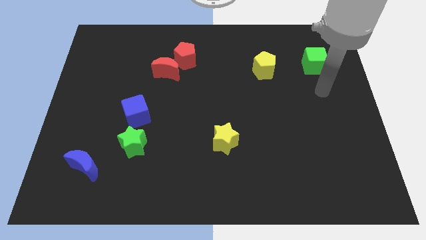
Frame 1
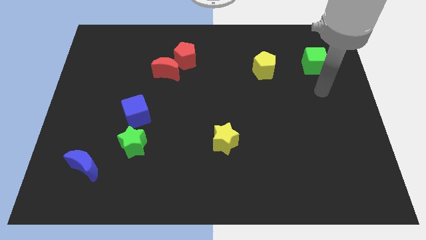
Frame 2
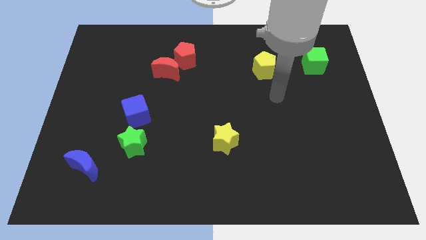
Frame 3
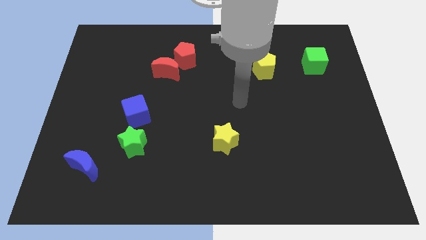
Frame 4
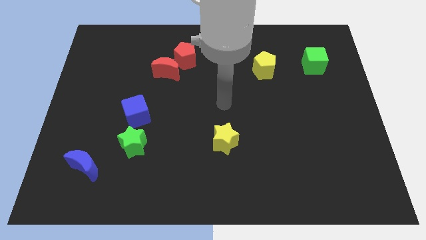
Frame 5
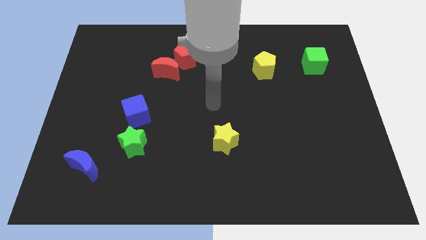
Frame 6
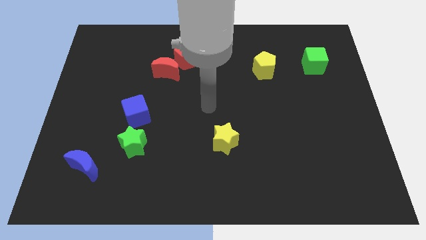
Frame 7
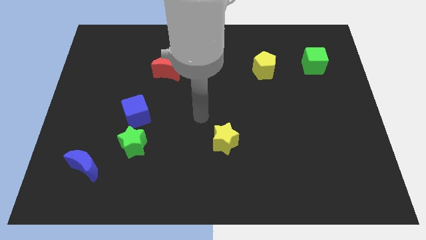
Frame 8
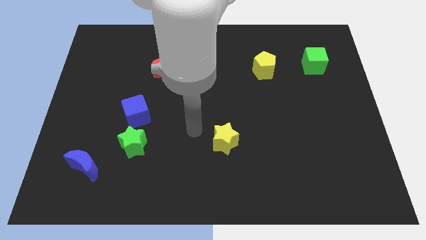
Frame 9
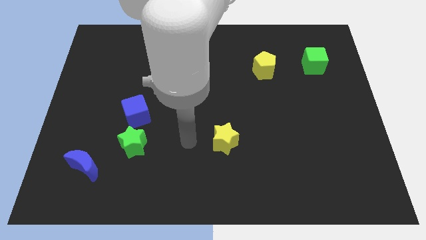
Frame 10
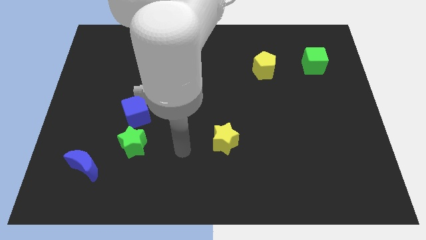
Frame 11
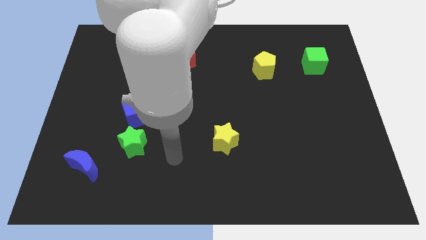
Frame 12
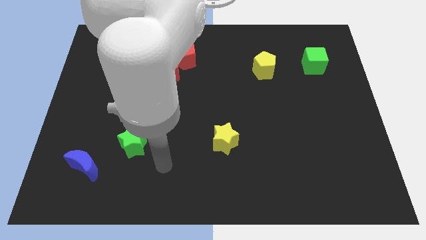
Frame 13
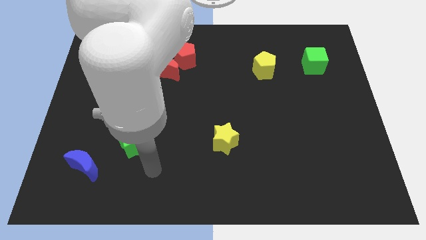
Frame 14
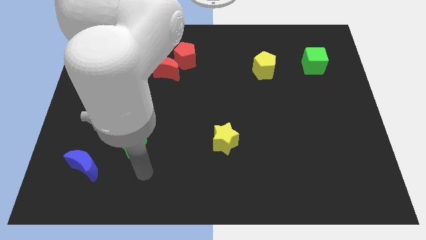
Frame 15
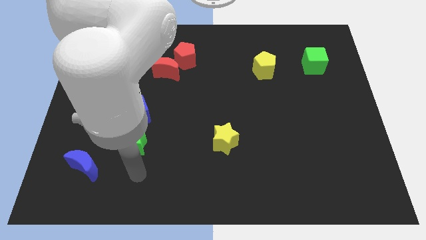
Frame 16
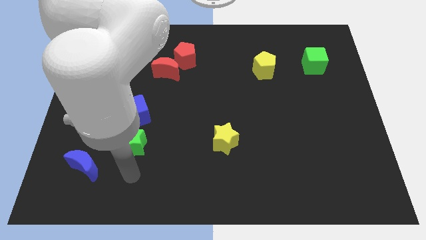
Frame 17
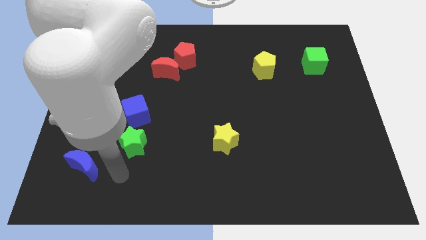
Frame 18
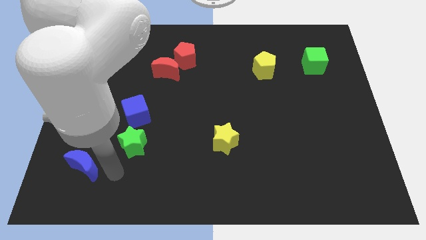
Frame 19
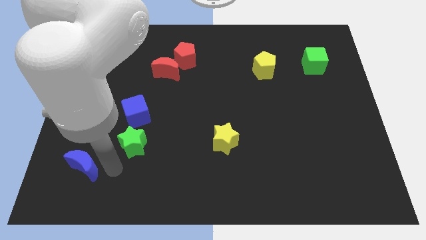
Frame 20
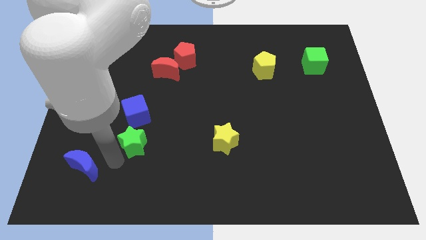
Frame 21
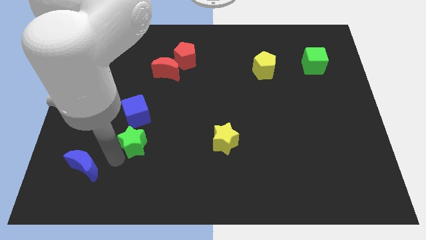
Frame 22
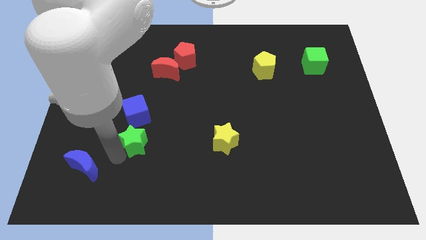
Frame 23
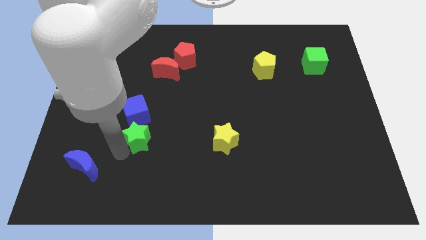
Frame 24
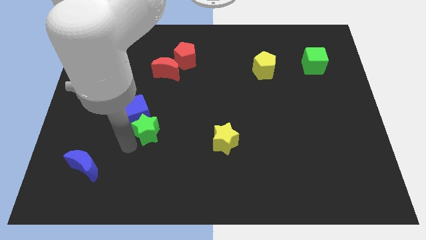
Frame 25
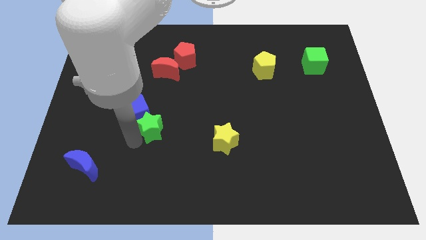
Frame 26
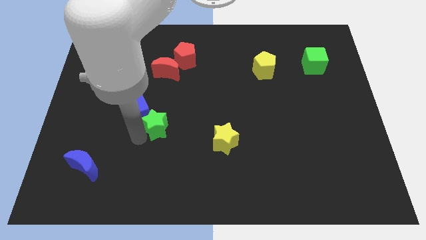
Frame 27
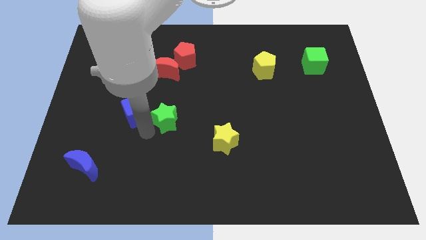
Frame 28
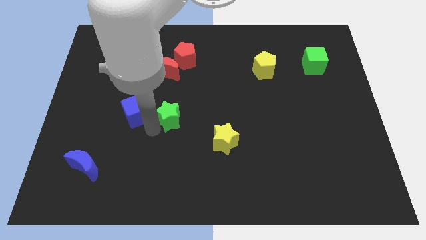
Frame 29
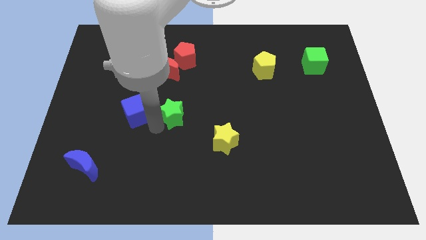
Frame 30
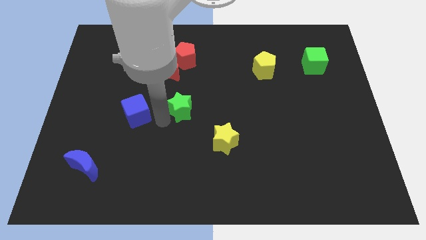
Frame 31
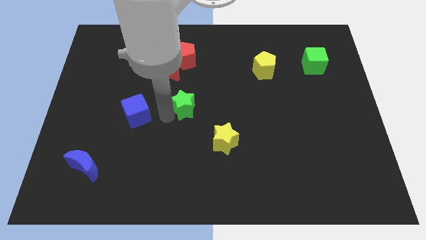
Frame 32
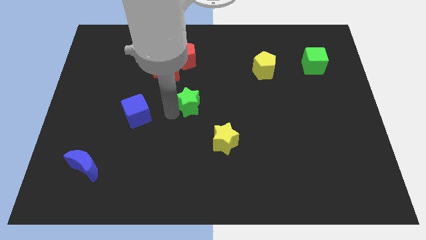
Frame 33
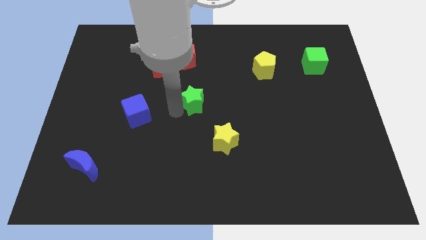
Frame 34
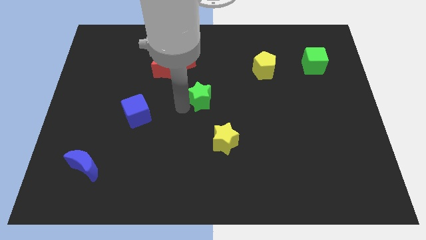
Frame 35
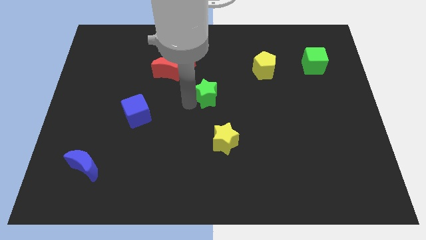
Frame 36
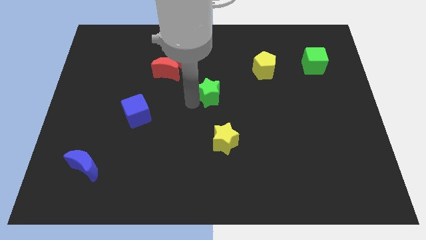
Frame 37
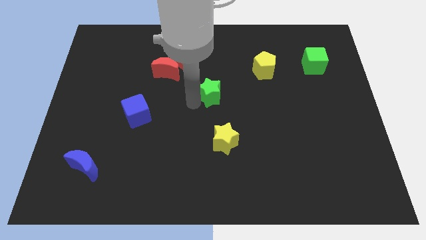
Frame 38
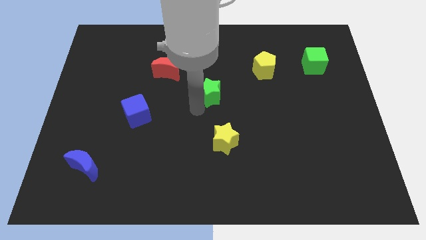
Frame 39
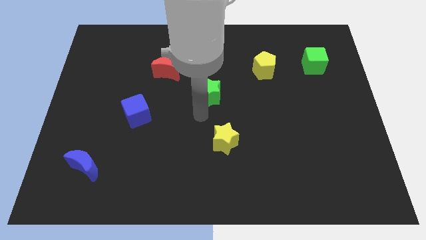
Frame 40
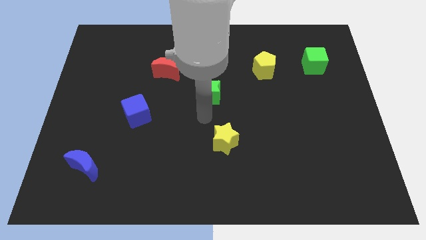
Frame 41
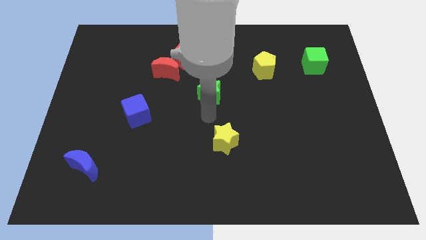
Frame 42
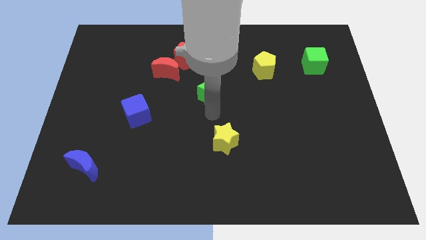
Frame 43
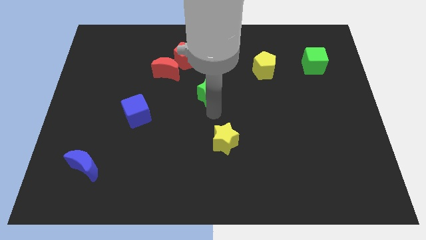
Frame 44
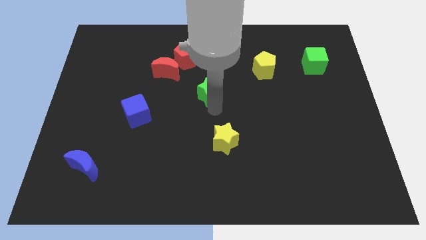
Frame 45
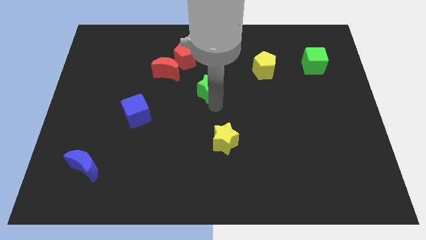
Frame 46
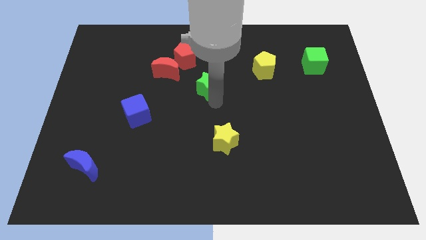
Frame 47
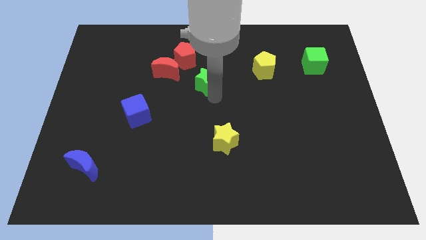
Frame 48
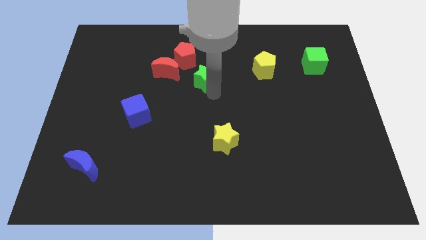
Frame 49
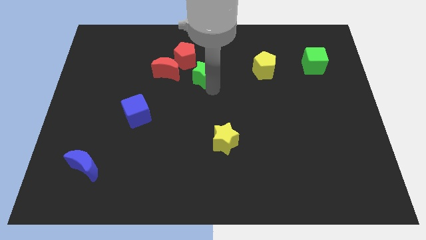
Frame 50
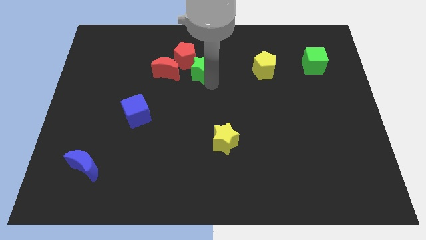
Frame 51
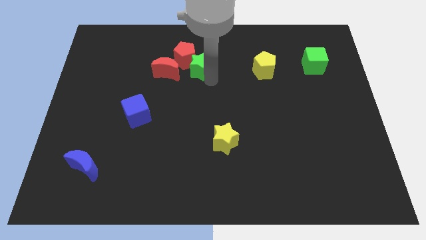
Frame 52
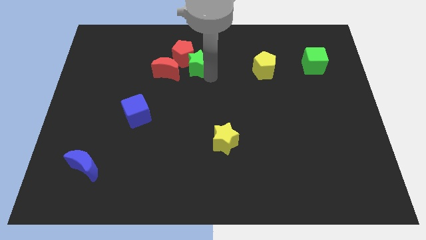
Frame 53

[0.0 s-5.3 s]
put the green star next to the red pentagon

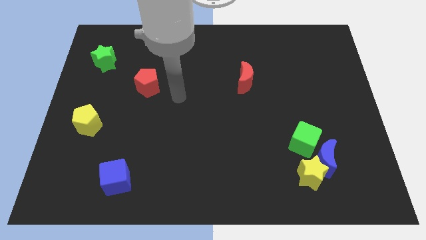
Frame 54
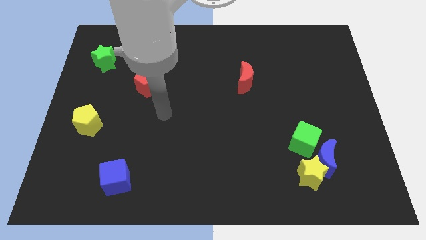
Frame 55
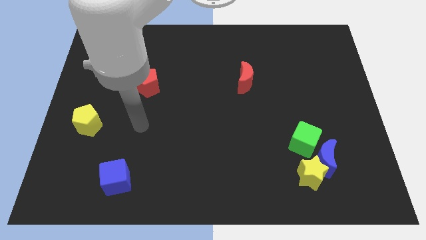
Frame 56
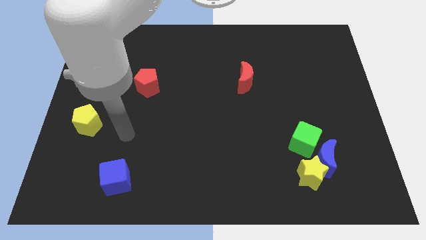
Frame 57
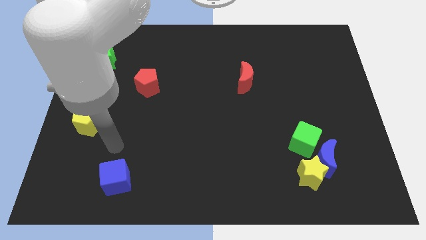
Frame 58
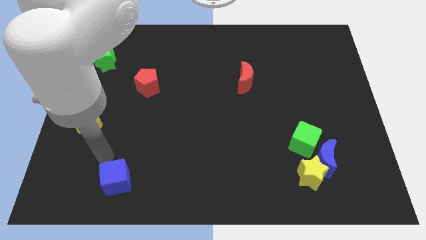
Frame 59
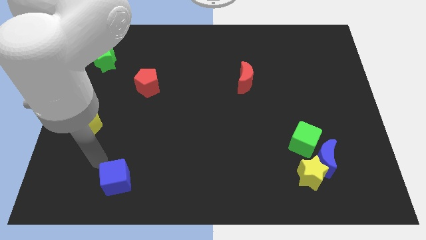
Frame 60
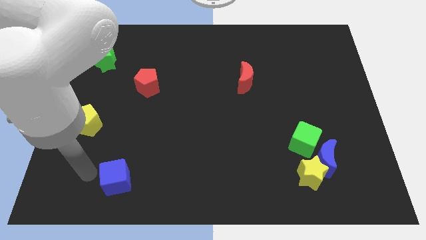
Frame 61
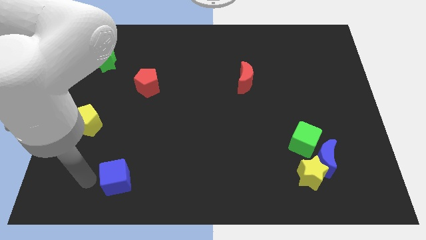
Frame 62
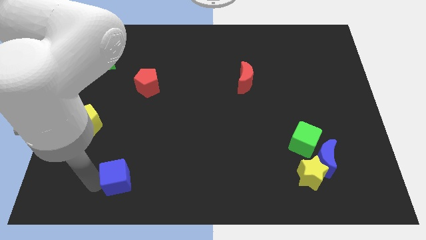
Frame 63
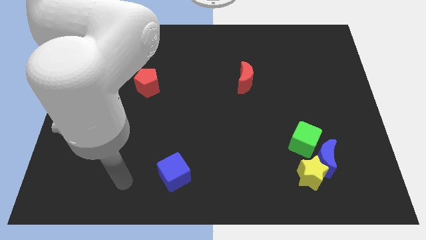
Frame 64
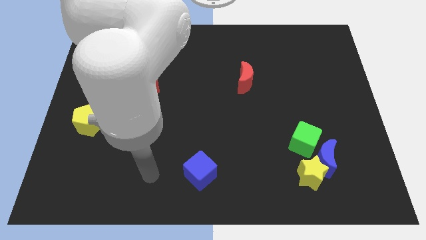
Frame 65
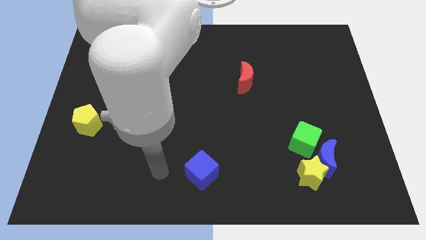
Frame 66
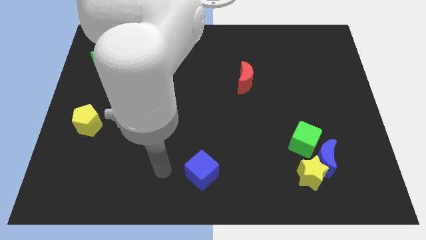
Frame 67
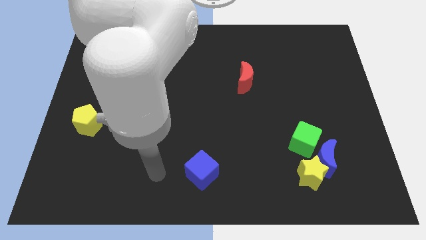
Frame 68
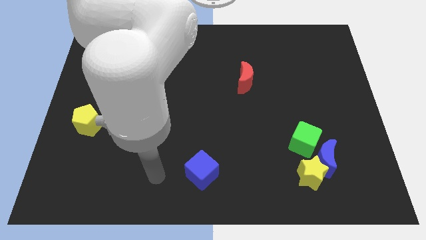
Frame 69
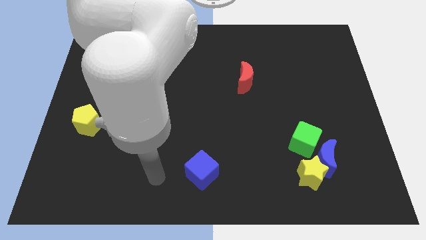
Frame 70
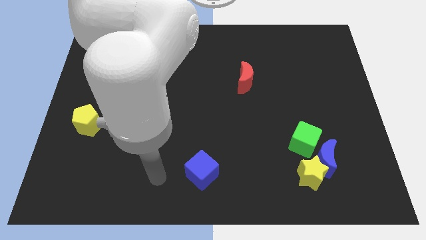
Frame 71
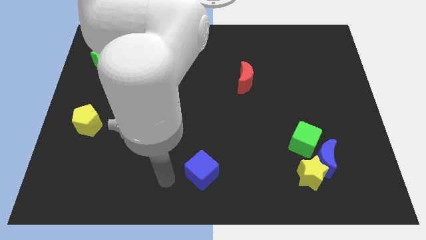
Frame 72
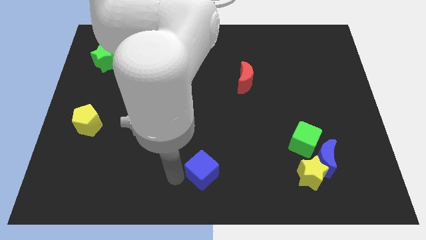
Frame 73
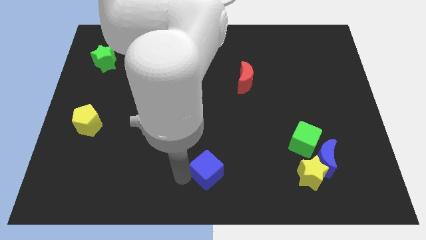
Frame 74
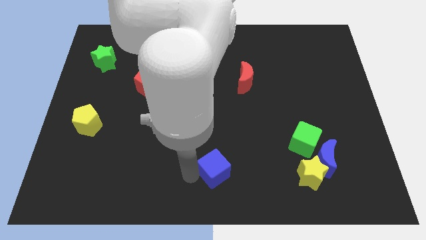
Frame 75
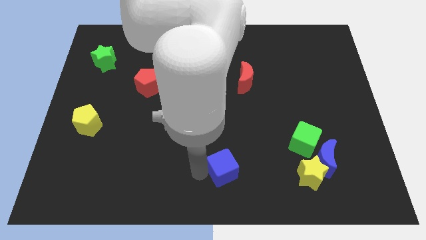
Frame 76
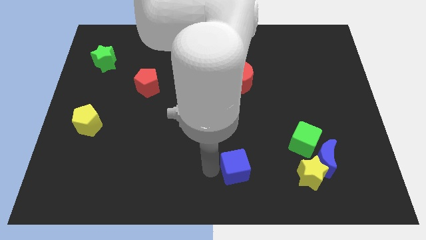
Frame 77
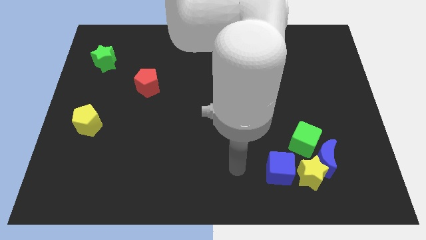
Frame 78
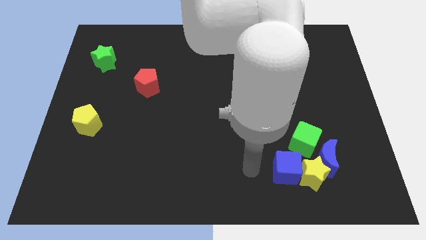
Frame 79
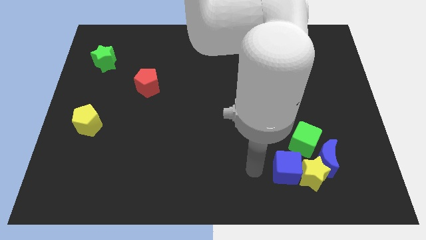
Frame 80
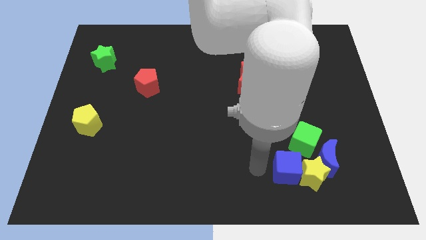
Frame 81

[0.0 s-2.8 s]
slide the blue cube towards the yellow star
